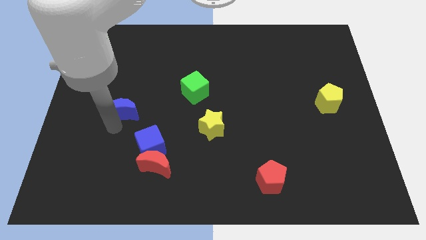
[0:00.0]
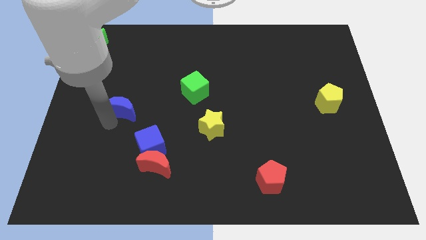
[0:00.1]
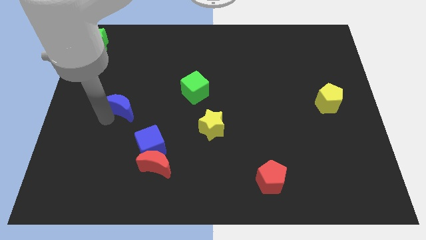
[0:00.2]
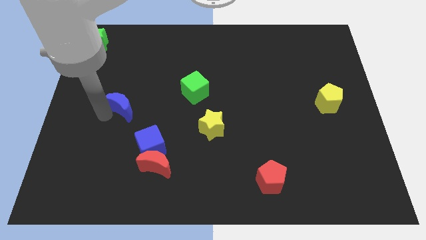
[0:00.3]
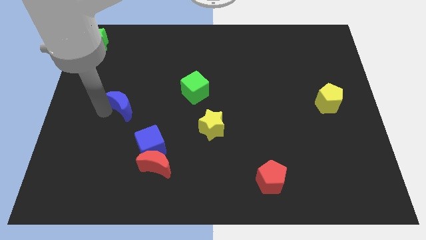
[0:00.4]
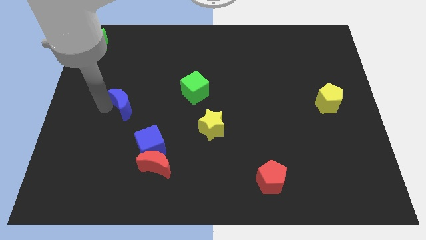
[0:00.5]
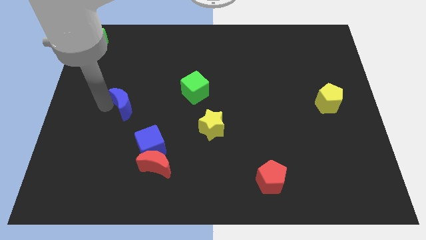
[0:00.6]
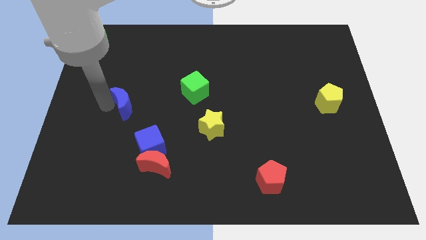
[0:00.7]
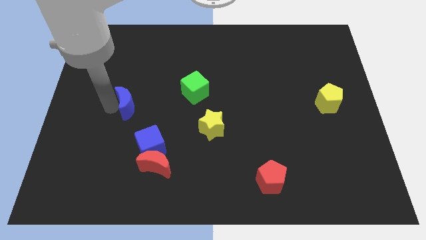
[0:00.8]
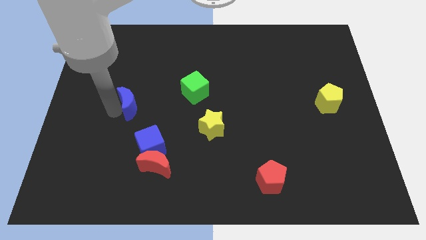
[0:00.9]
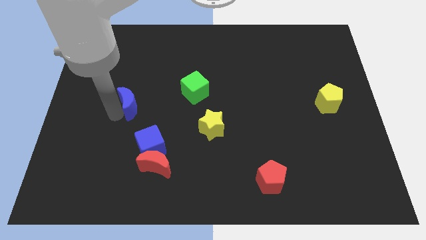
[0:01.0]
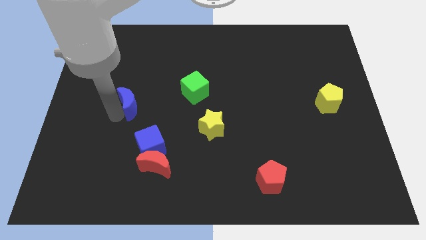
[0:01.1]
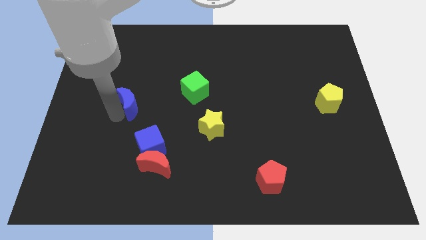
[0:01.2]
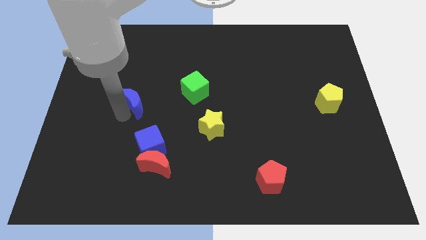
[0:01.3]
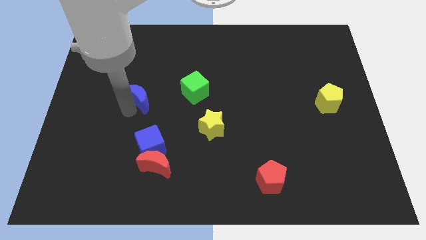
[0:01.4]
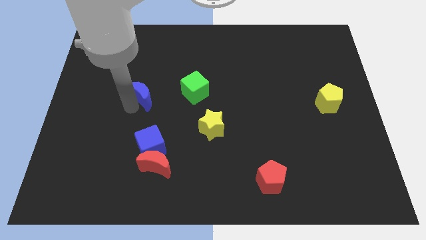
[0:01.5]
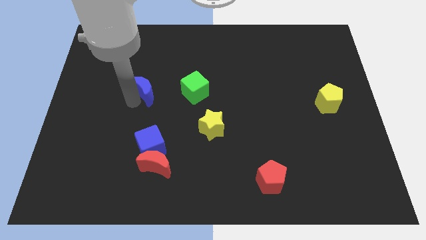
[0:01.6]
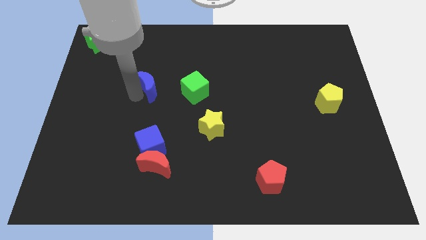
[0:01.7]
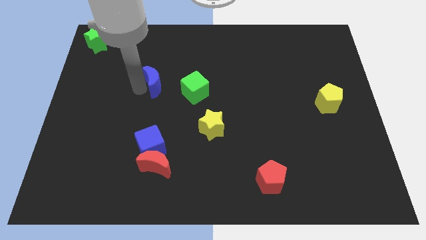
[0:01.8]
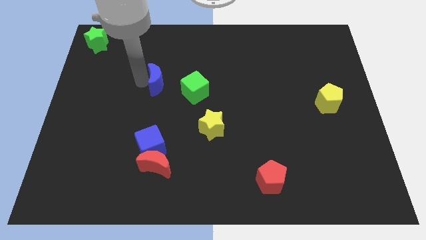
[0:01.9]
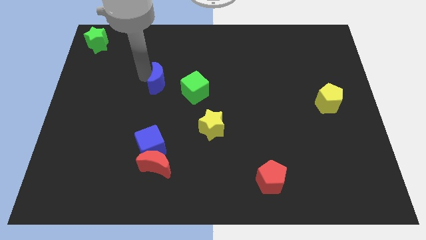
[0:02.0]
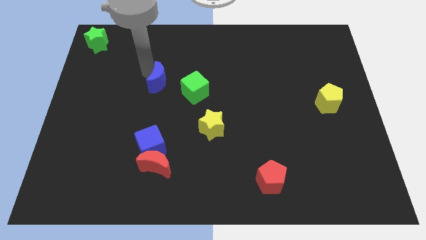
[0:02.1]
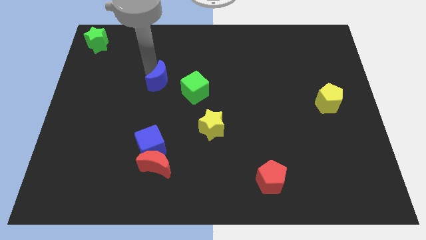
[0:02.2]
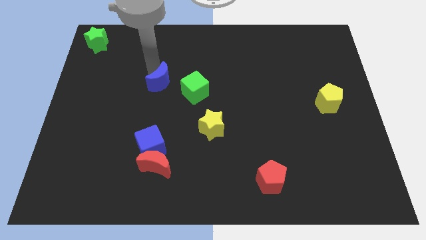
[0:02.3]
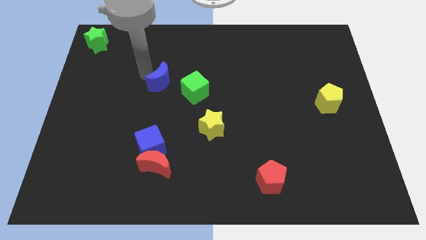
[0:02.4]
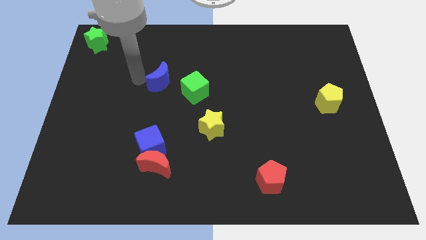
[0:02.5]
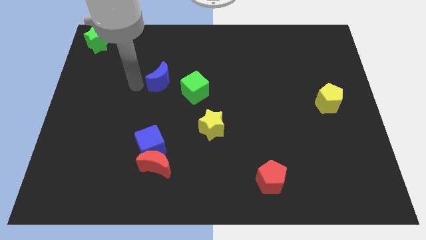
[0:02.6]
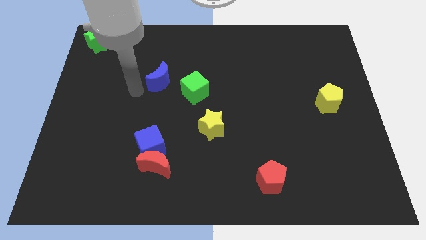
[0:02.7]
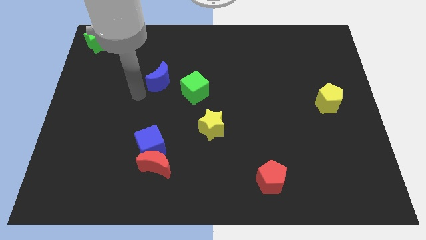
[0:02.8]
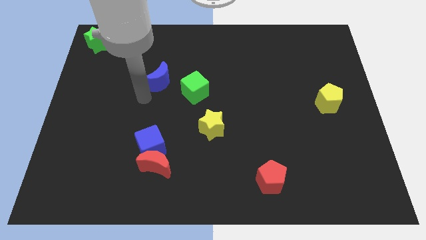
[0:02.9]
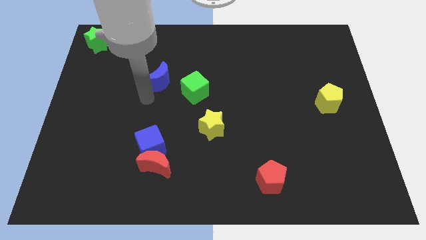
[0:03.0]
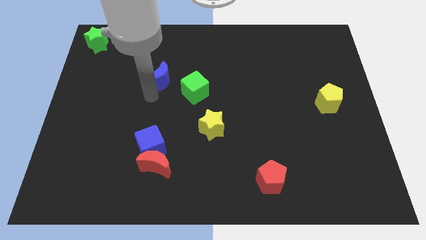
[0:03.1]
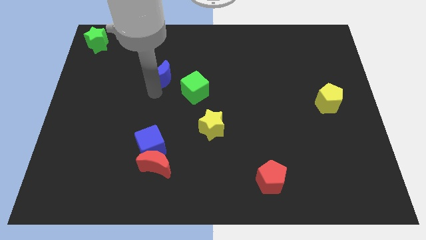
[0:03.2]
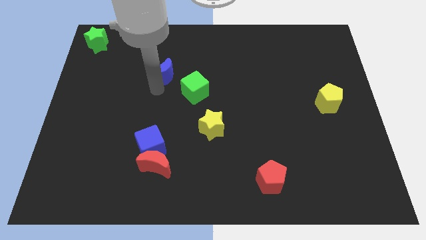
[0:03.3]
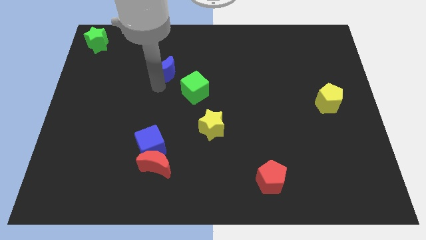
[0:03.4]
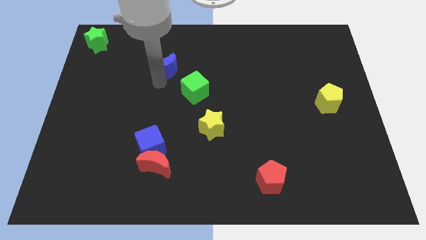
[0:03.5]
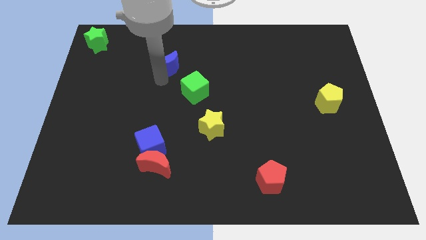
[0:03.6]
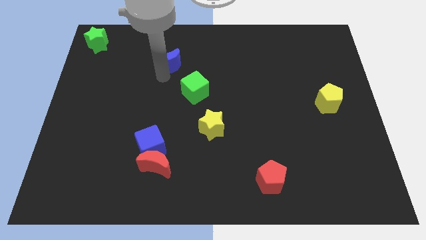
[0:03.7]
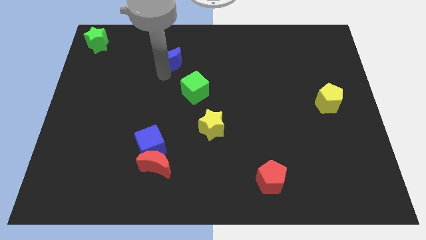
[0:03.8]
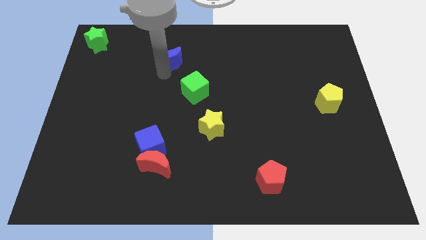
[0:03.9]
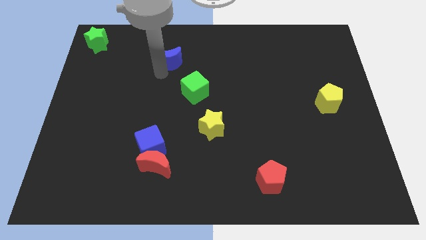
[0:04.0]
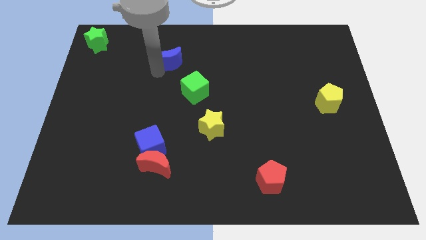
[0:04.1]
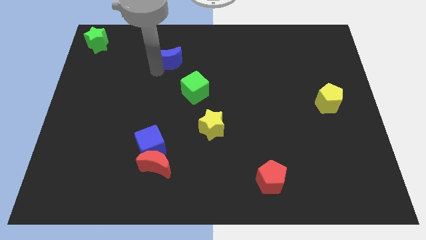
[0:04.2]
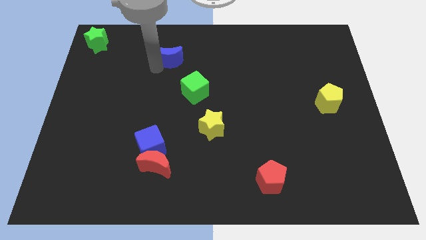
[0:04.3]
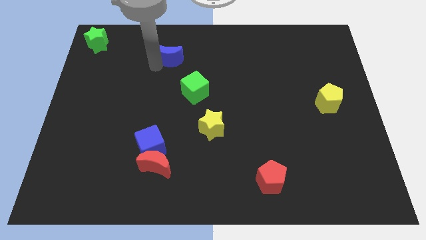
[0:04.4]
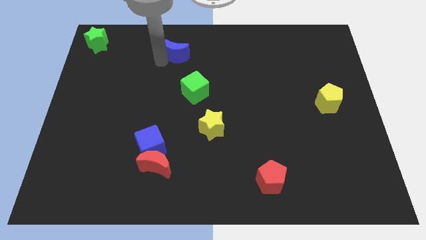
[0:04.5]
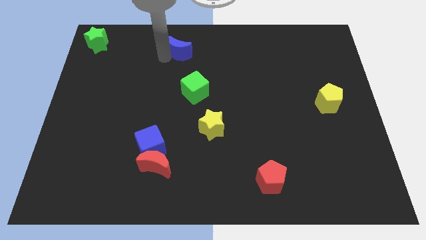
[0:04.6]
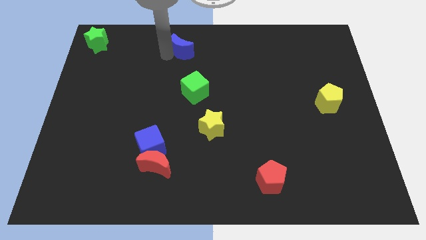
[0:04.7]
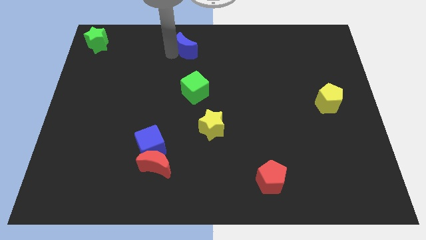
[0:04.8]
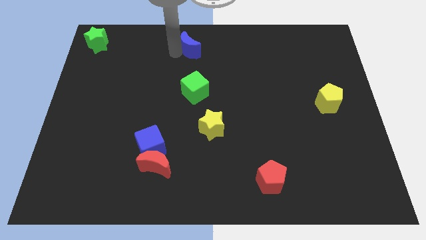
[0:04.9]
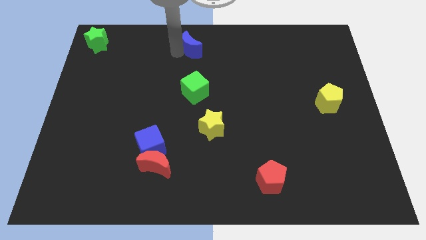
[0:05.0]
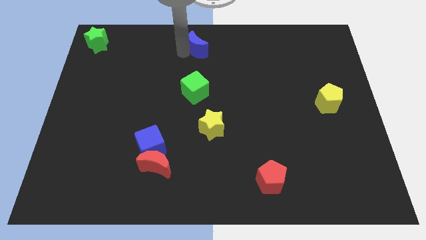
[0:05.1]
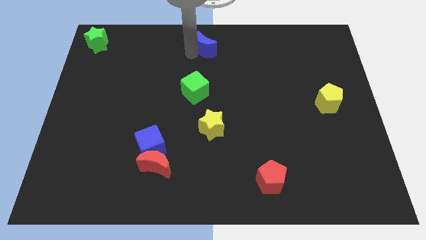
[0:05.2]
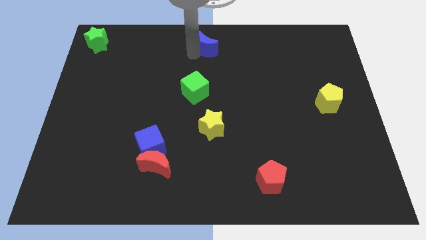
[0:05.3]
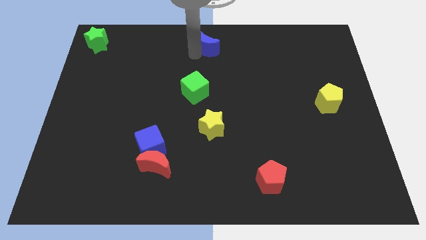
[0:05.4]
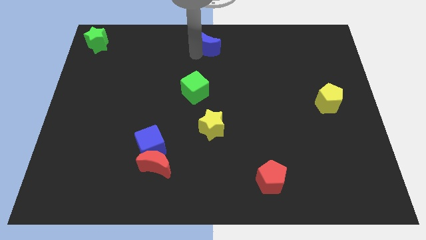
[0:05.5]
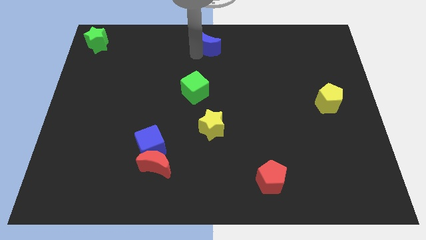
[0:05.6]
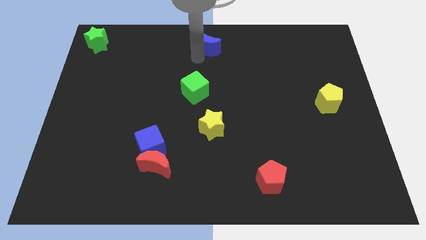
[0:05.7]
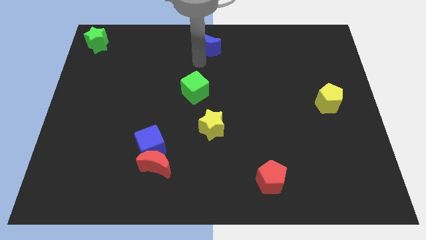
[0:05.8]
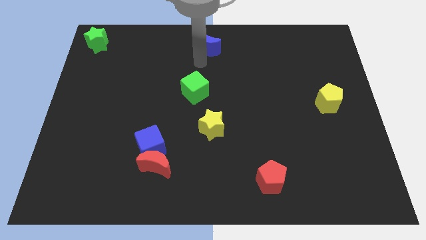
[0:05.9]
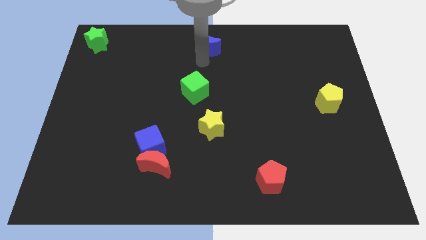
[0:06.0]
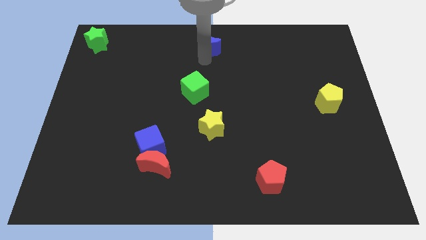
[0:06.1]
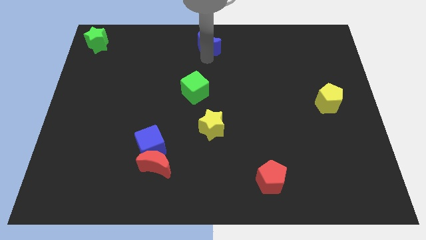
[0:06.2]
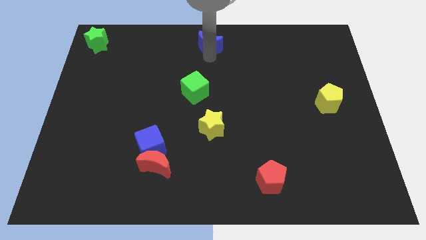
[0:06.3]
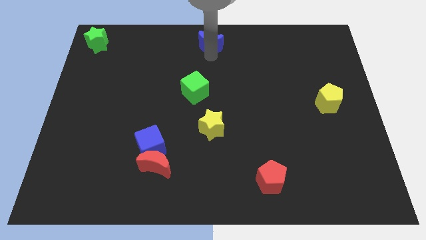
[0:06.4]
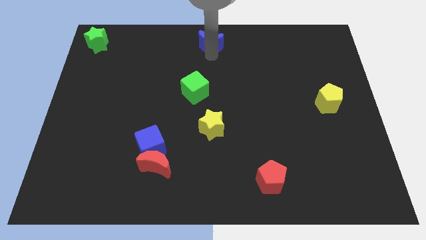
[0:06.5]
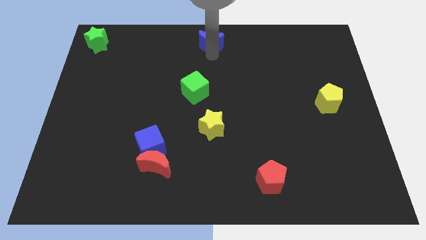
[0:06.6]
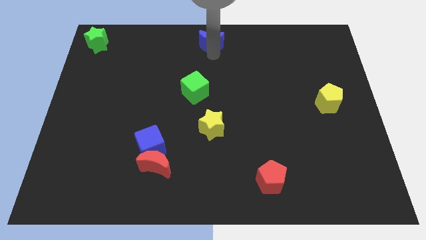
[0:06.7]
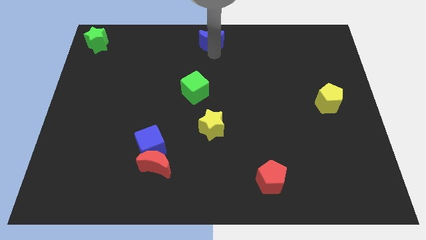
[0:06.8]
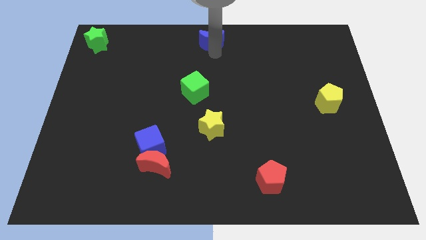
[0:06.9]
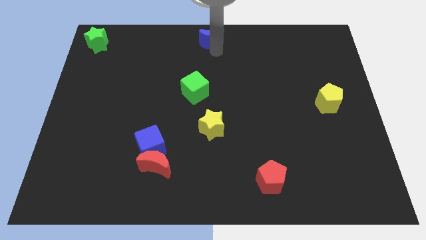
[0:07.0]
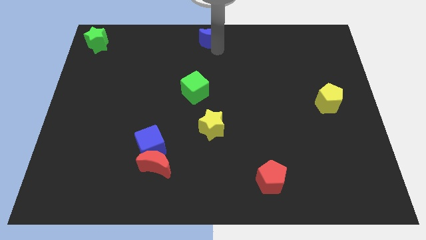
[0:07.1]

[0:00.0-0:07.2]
place the blue moon above the green cube

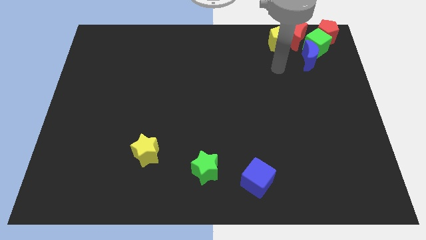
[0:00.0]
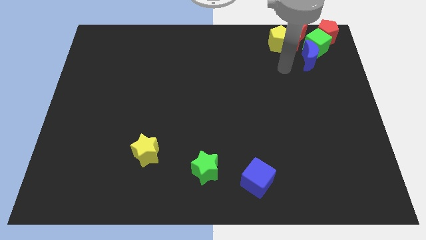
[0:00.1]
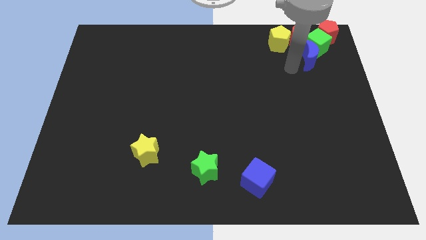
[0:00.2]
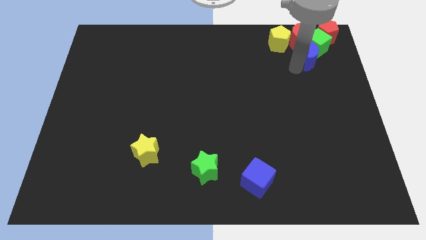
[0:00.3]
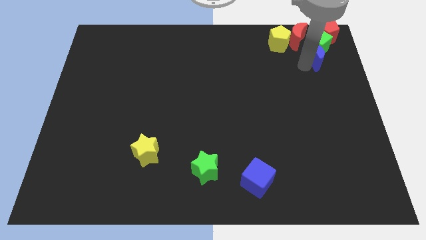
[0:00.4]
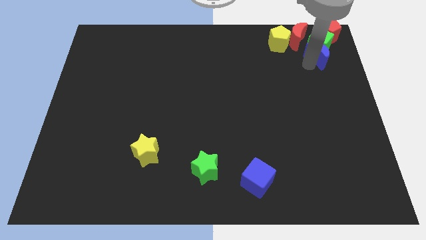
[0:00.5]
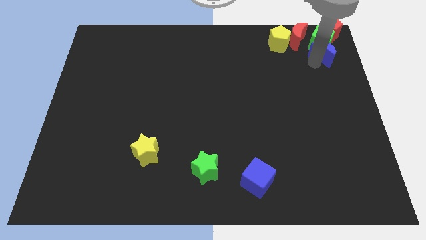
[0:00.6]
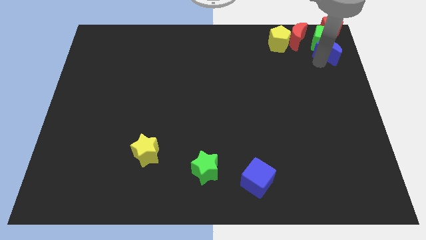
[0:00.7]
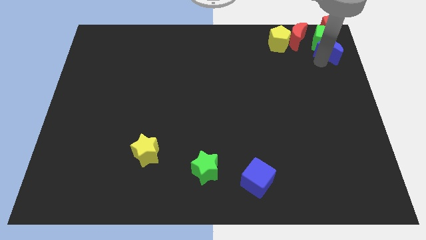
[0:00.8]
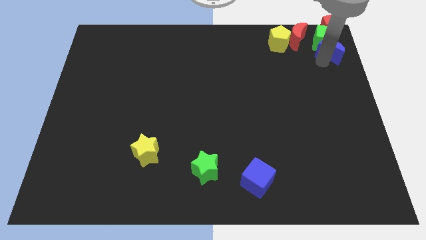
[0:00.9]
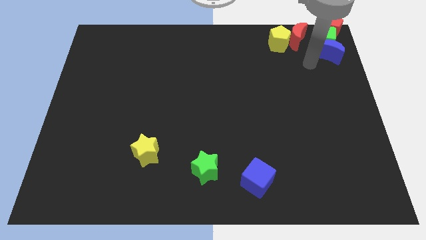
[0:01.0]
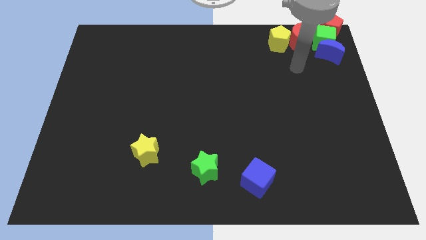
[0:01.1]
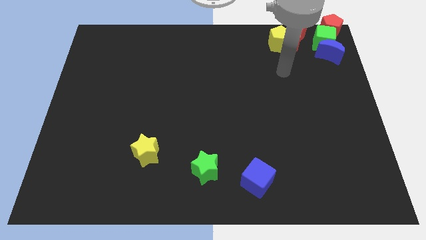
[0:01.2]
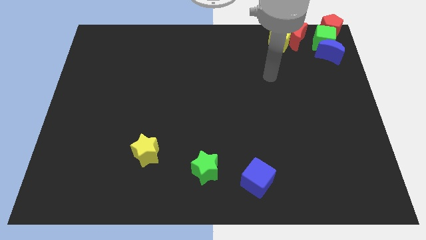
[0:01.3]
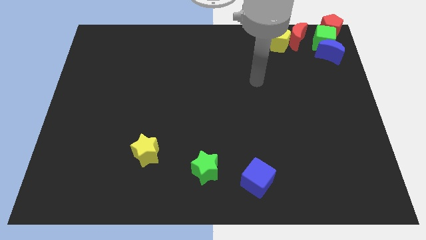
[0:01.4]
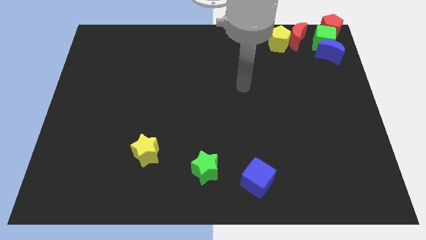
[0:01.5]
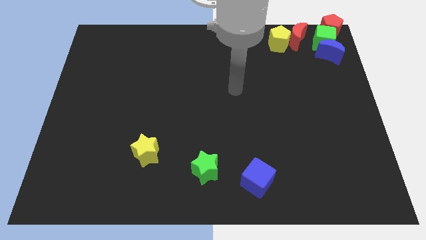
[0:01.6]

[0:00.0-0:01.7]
push red pentagon green block and blue crescent to the right corner of the board
